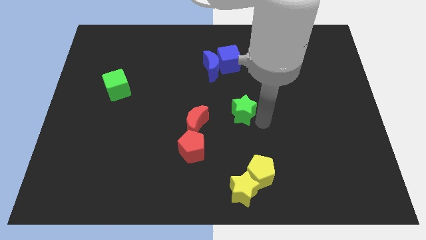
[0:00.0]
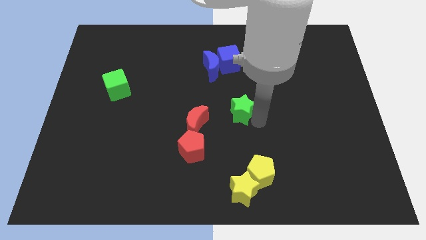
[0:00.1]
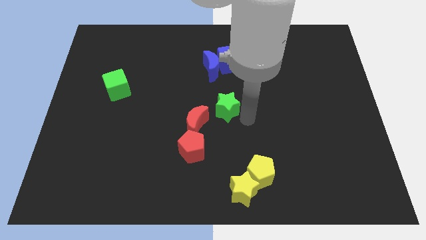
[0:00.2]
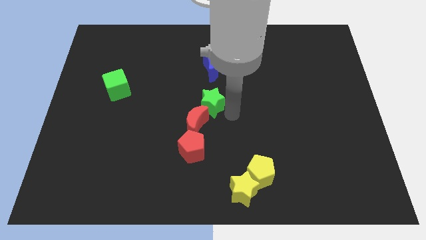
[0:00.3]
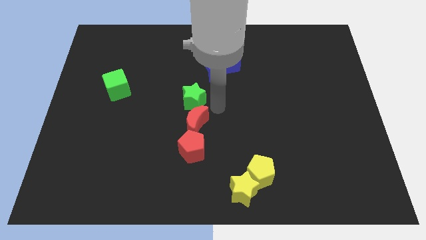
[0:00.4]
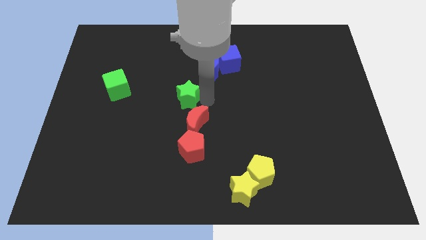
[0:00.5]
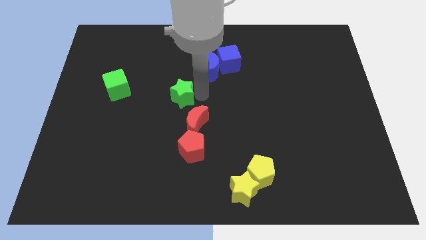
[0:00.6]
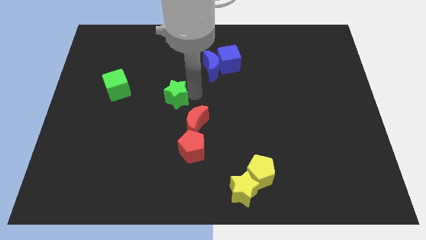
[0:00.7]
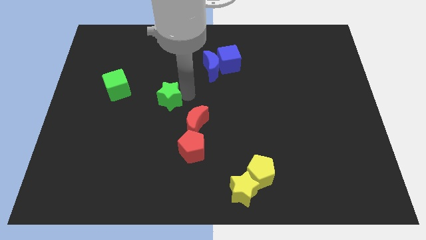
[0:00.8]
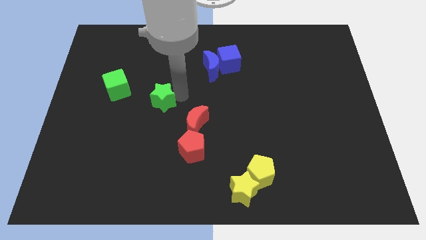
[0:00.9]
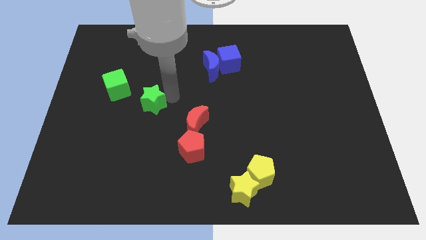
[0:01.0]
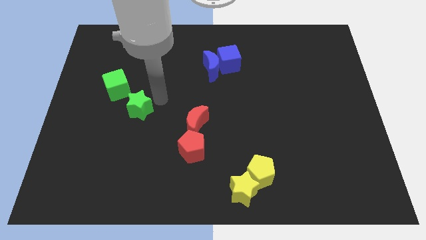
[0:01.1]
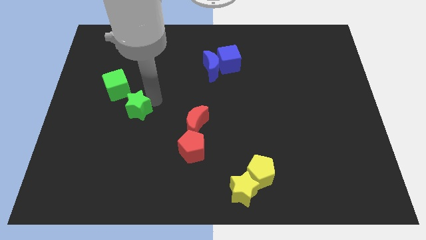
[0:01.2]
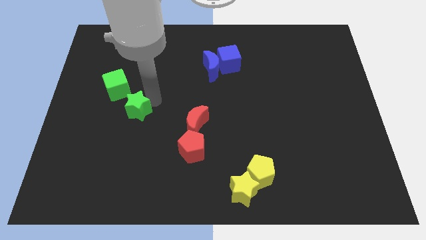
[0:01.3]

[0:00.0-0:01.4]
put the green star at the bottom right side of the green cube

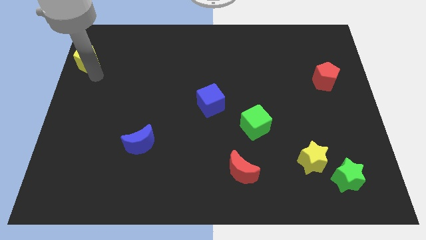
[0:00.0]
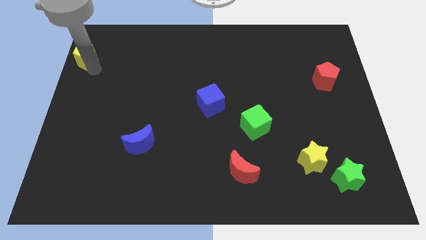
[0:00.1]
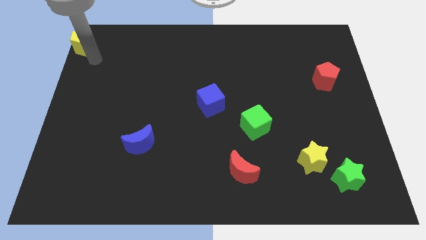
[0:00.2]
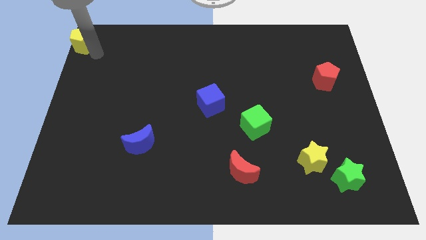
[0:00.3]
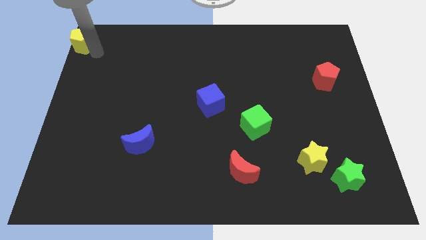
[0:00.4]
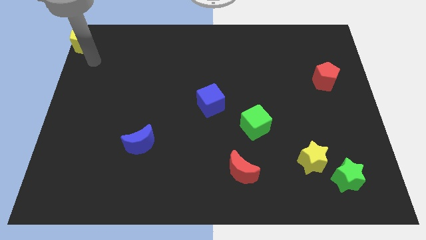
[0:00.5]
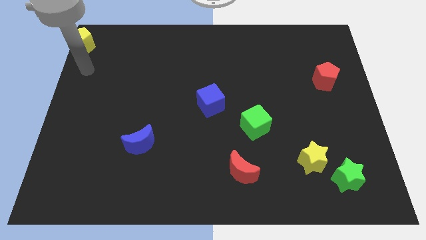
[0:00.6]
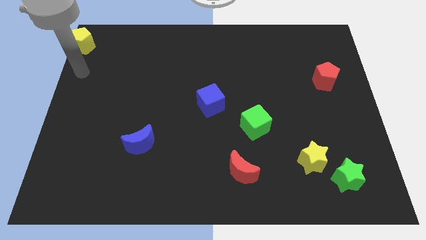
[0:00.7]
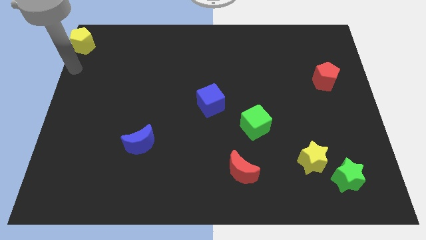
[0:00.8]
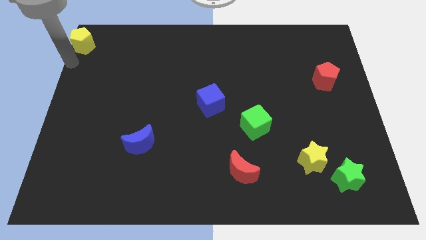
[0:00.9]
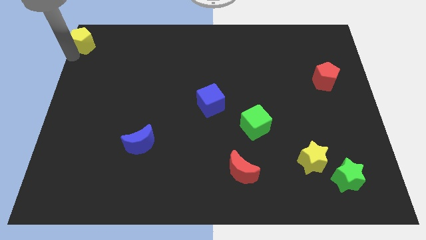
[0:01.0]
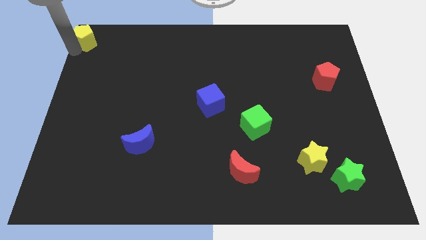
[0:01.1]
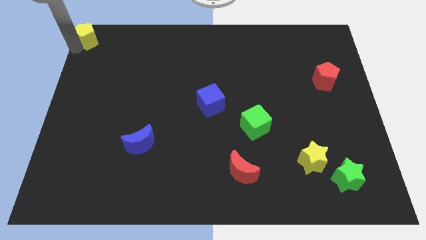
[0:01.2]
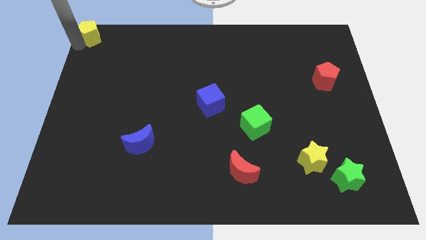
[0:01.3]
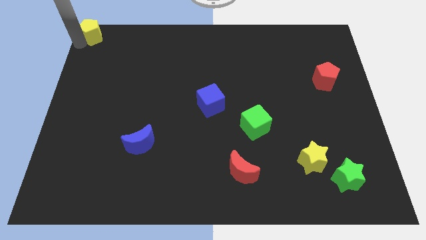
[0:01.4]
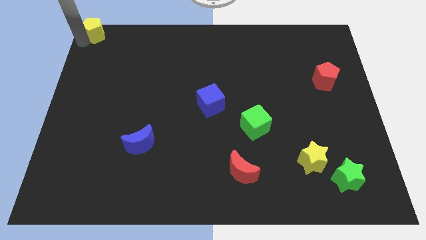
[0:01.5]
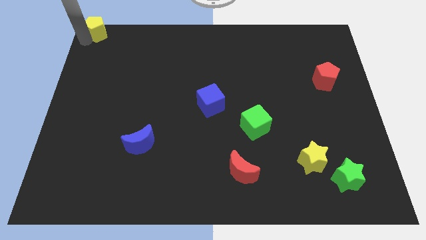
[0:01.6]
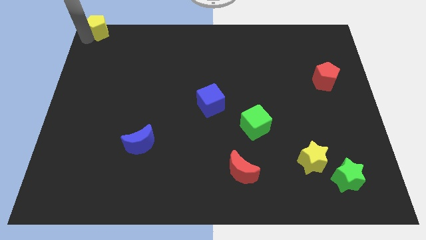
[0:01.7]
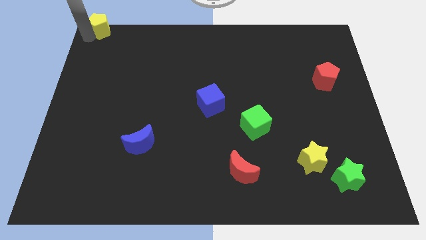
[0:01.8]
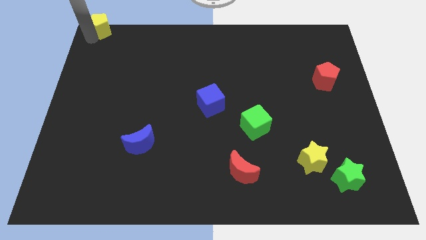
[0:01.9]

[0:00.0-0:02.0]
drag the yellow pentagon to the top left side of the table

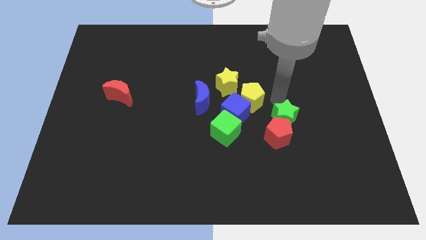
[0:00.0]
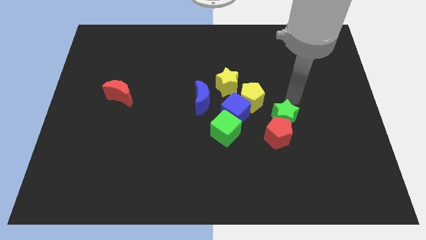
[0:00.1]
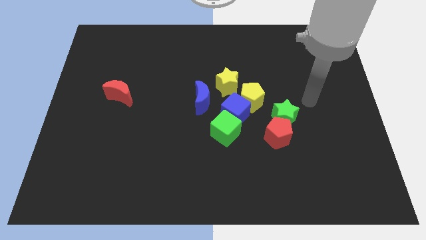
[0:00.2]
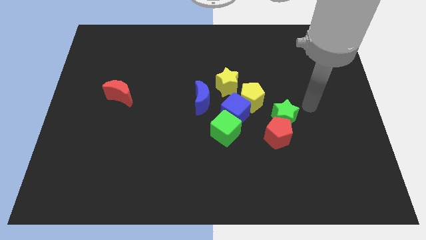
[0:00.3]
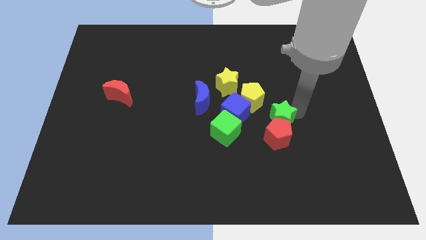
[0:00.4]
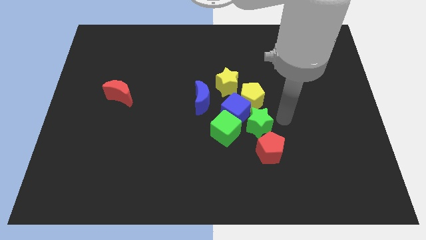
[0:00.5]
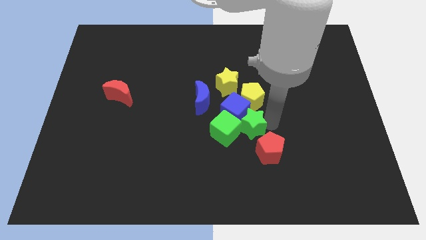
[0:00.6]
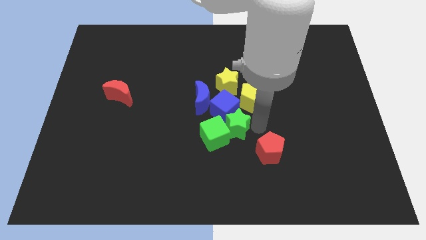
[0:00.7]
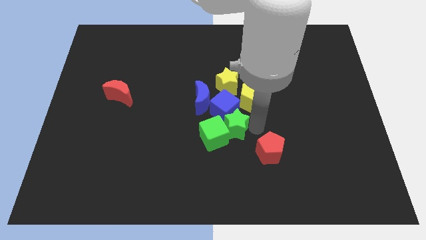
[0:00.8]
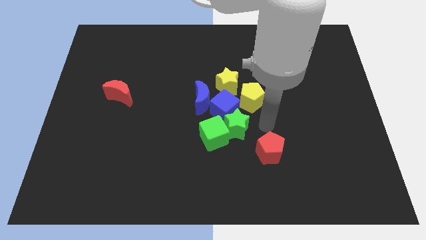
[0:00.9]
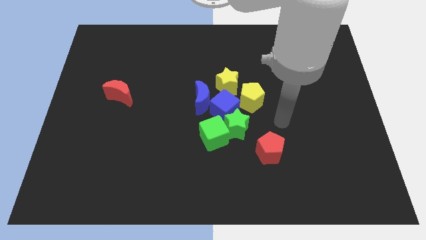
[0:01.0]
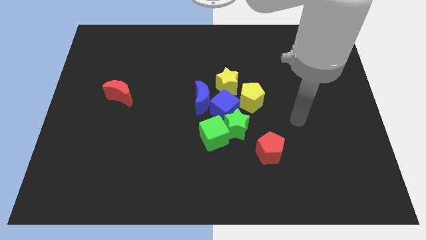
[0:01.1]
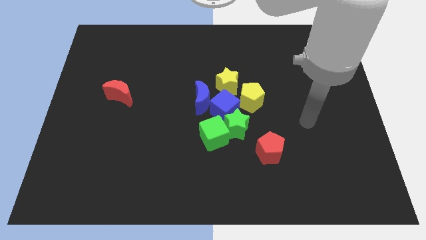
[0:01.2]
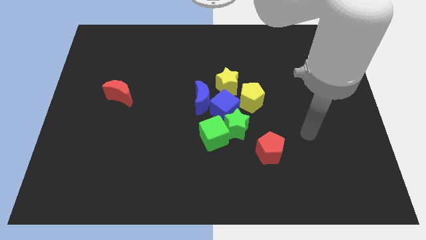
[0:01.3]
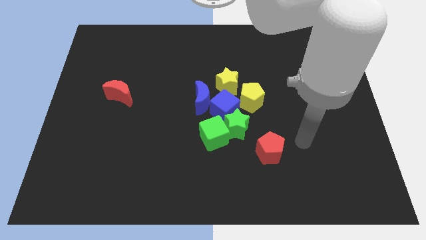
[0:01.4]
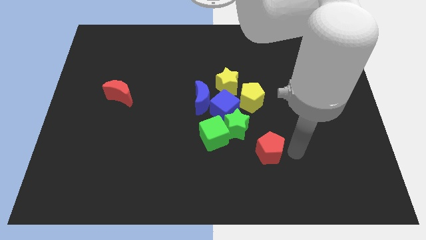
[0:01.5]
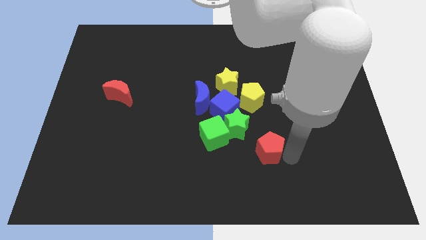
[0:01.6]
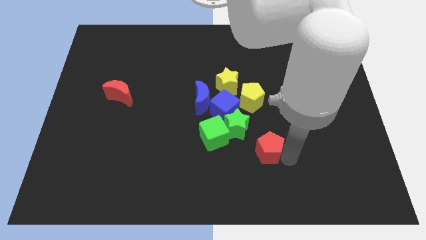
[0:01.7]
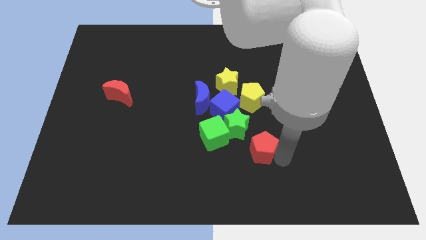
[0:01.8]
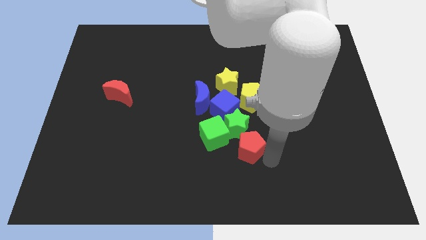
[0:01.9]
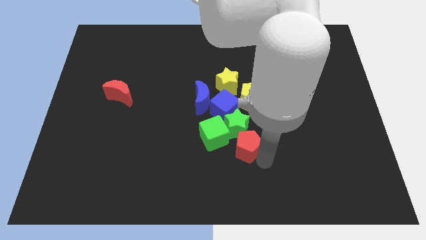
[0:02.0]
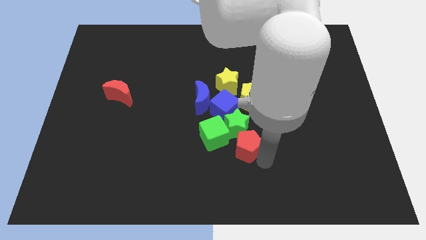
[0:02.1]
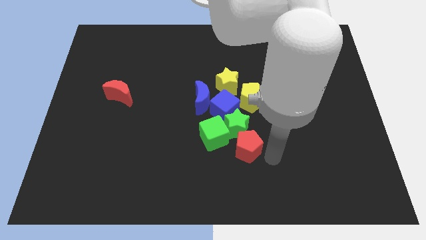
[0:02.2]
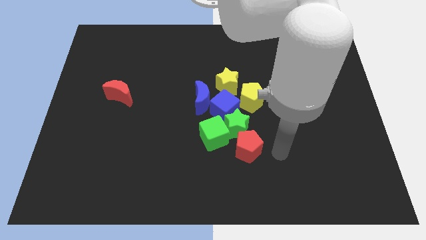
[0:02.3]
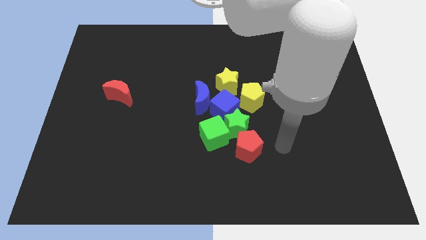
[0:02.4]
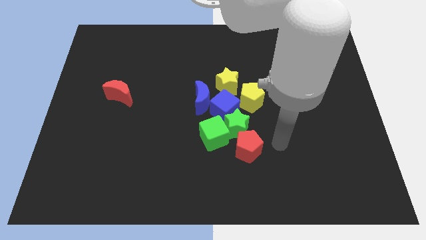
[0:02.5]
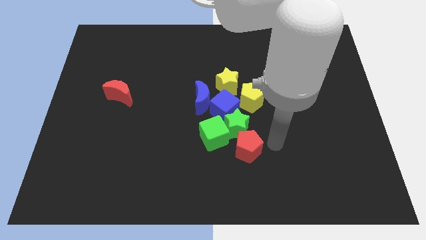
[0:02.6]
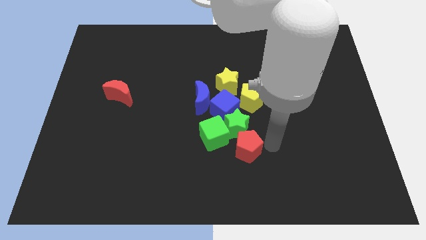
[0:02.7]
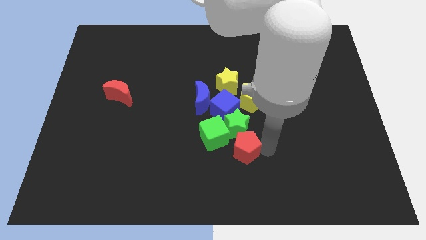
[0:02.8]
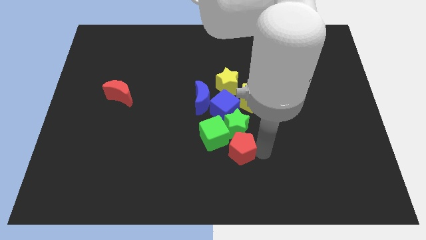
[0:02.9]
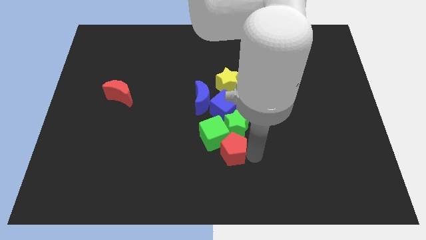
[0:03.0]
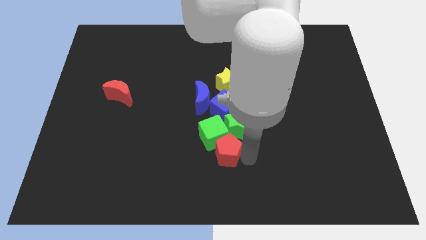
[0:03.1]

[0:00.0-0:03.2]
push red pentagon into green cube

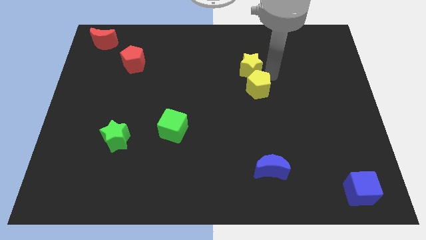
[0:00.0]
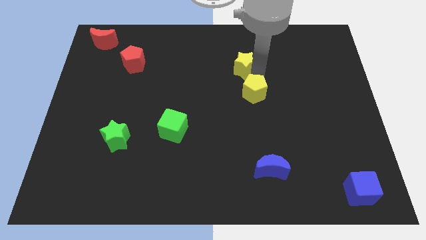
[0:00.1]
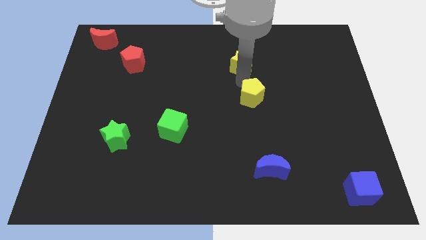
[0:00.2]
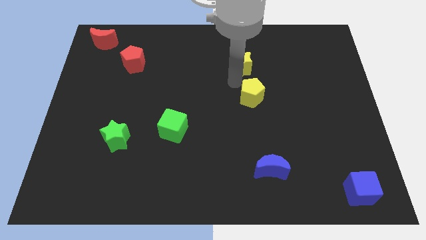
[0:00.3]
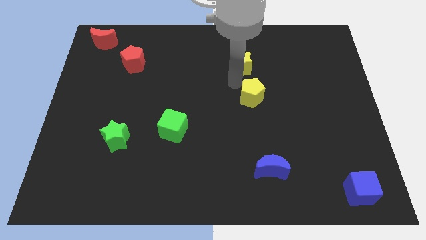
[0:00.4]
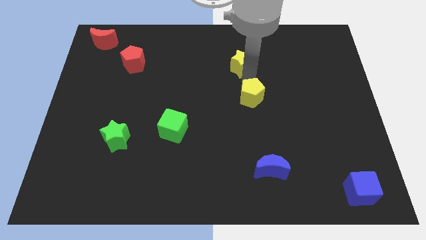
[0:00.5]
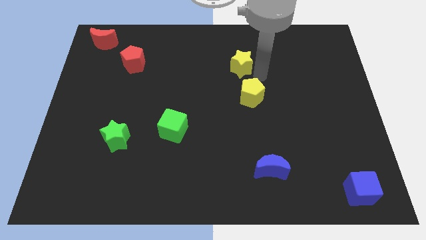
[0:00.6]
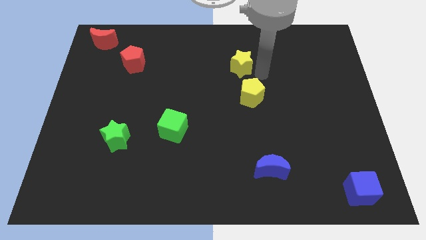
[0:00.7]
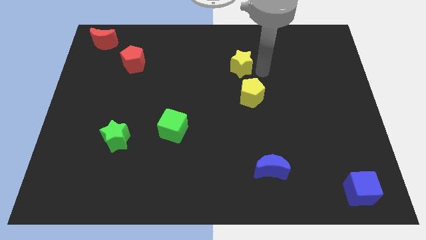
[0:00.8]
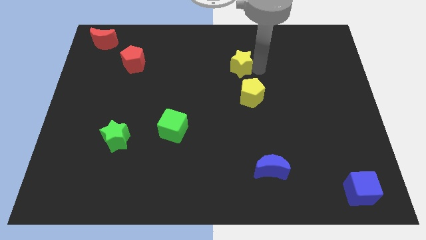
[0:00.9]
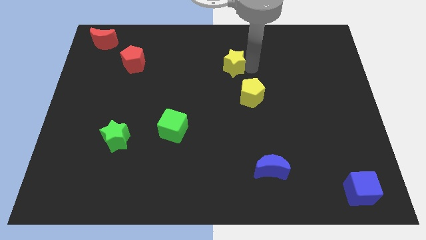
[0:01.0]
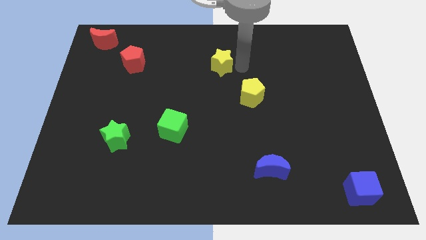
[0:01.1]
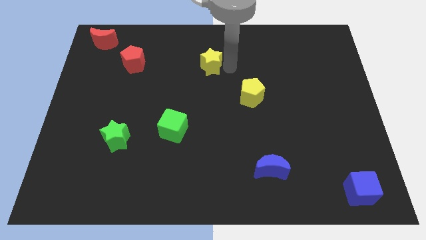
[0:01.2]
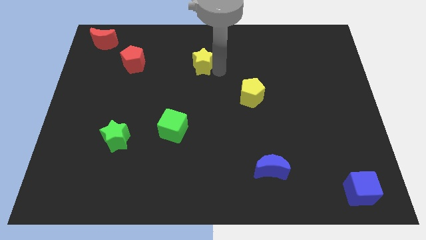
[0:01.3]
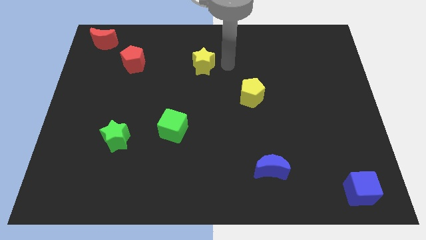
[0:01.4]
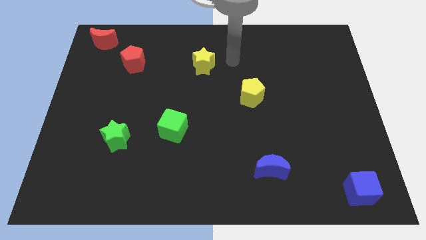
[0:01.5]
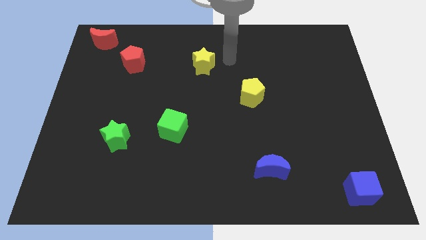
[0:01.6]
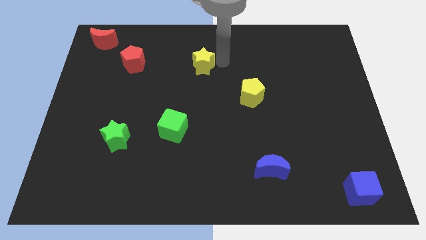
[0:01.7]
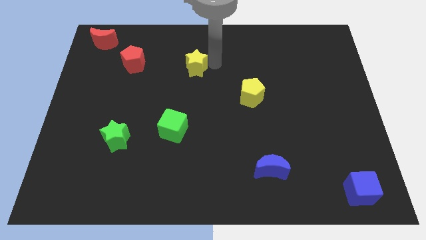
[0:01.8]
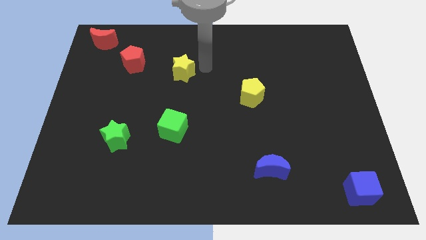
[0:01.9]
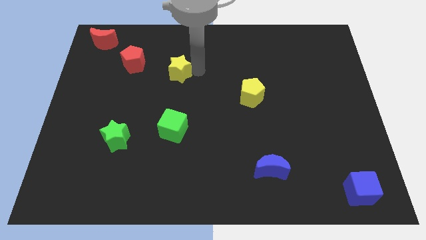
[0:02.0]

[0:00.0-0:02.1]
separate the yellow star and yellow pentagon

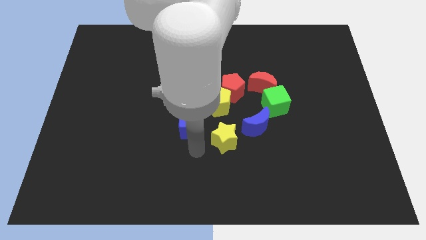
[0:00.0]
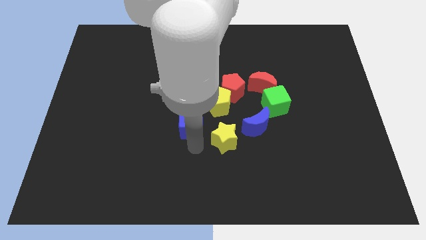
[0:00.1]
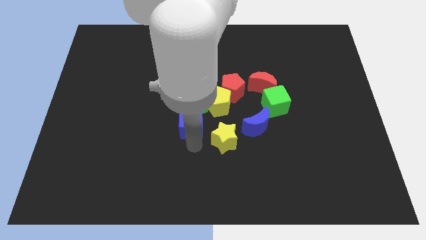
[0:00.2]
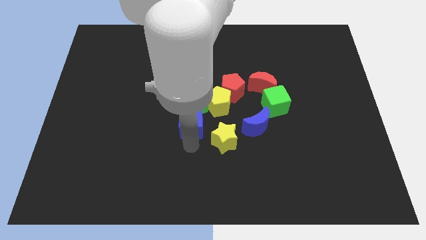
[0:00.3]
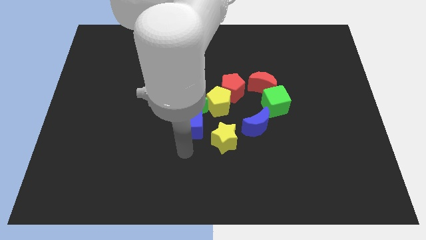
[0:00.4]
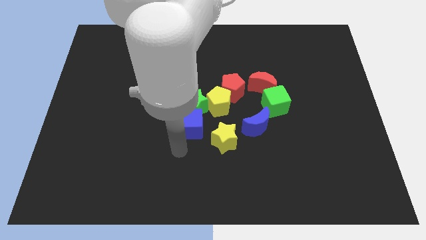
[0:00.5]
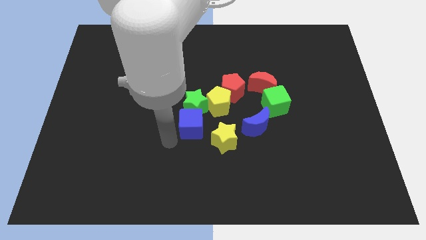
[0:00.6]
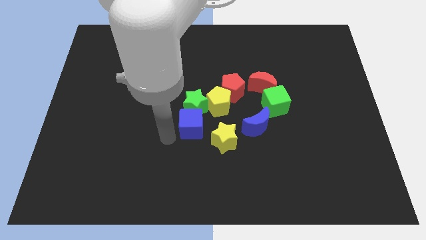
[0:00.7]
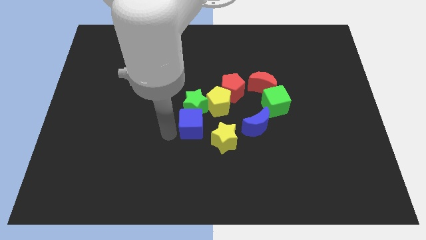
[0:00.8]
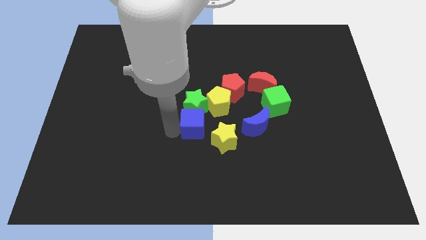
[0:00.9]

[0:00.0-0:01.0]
move the arm left to the blue cube
